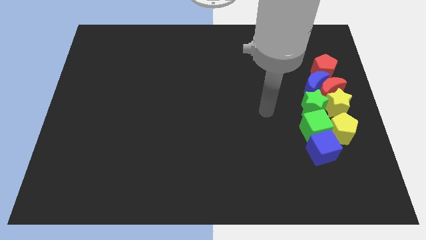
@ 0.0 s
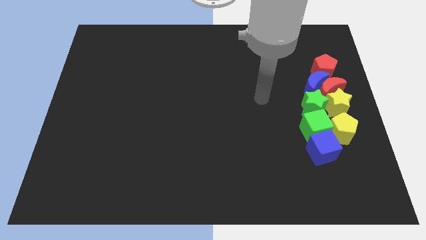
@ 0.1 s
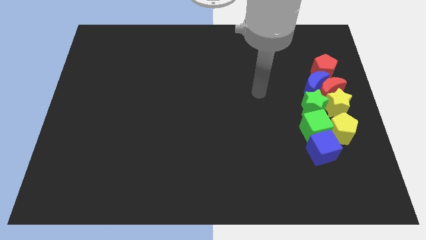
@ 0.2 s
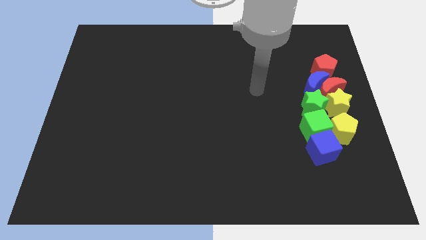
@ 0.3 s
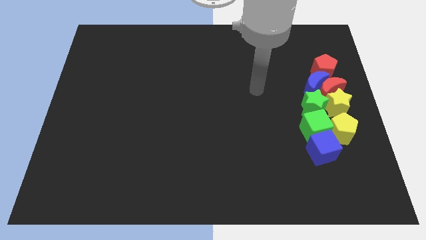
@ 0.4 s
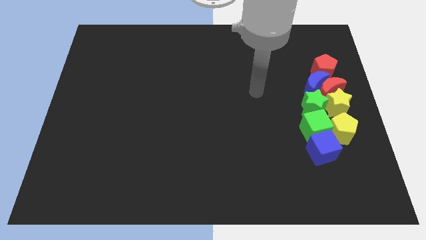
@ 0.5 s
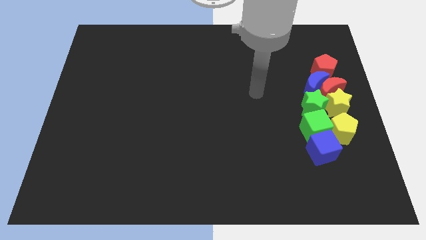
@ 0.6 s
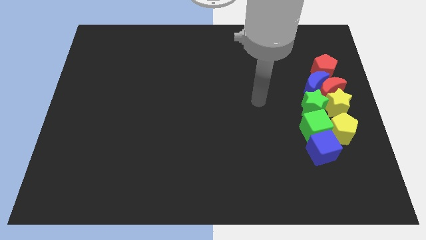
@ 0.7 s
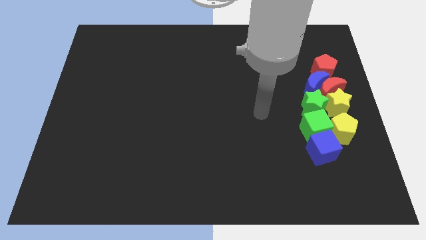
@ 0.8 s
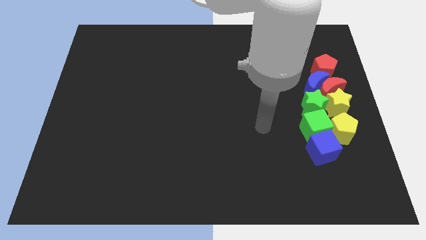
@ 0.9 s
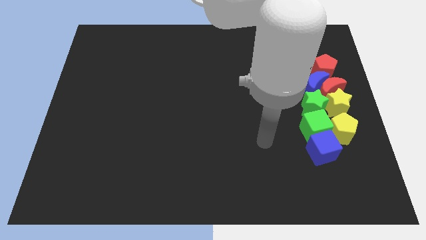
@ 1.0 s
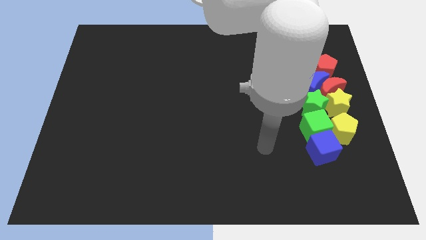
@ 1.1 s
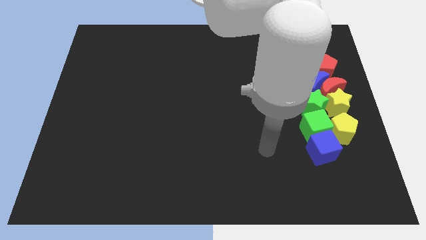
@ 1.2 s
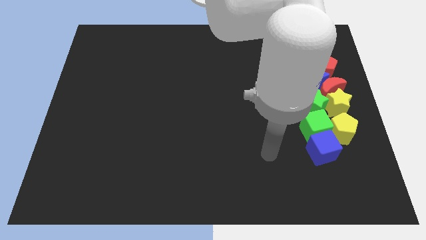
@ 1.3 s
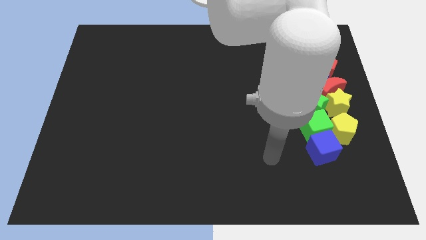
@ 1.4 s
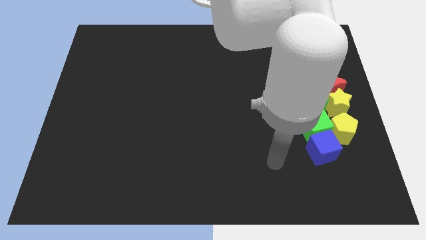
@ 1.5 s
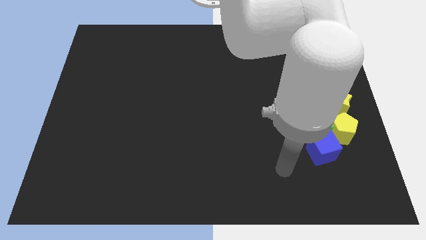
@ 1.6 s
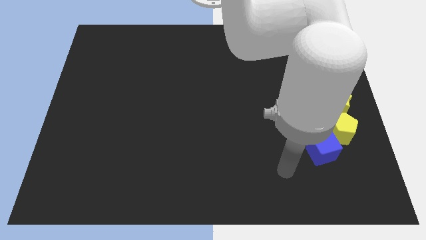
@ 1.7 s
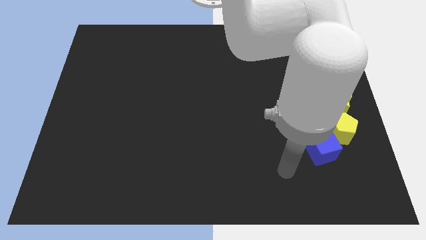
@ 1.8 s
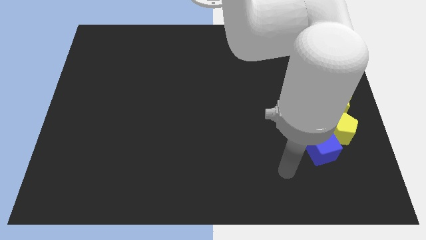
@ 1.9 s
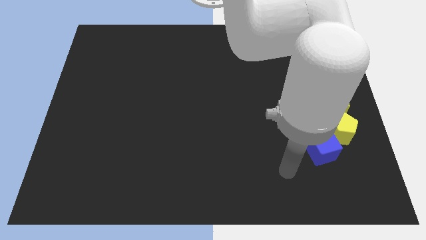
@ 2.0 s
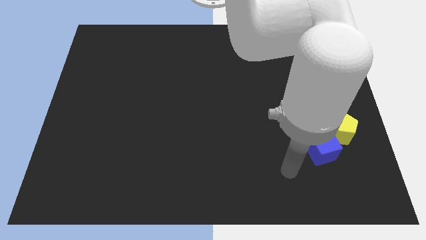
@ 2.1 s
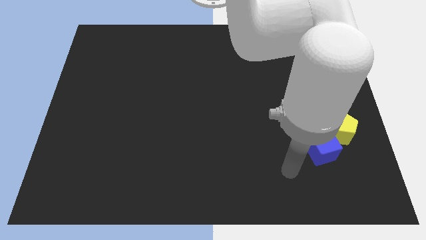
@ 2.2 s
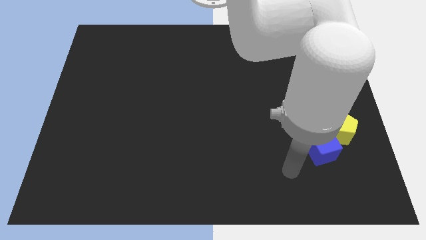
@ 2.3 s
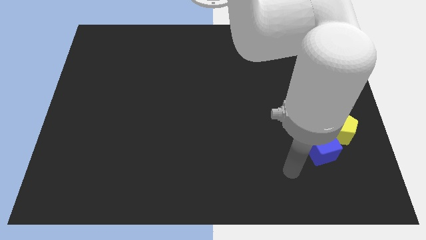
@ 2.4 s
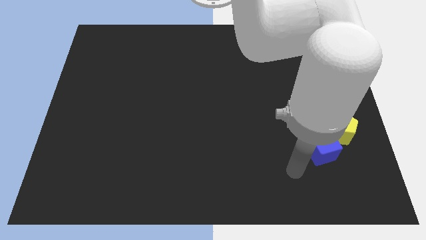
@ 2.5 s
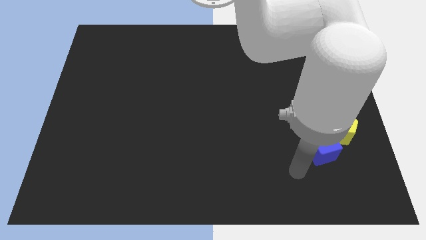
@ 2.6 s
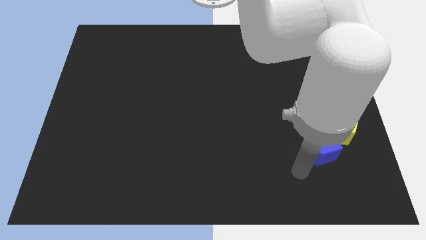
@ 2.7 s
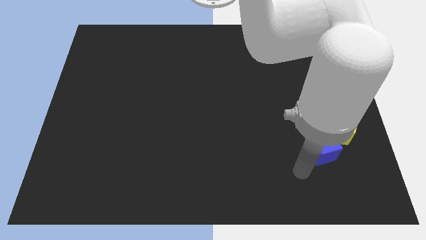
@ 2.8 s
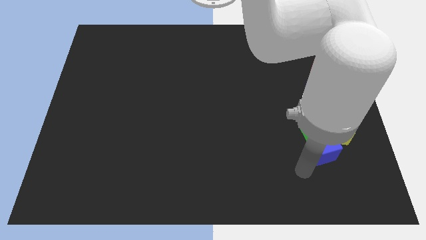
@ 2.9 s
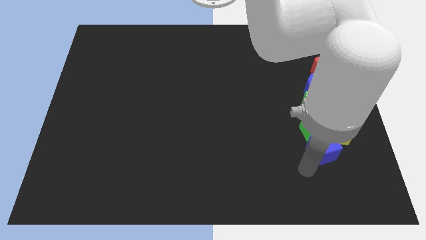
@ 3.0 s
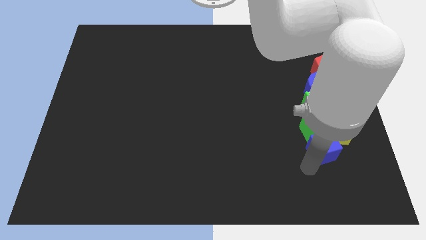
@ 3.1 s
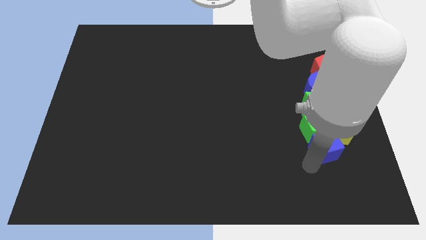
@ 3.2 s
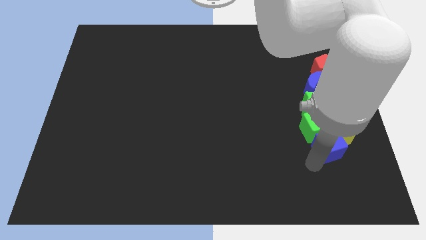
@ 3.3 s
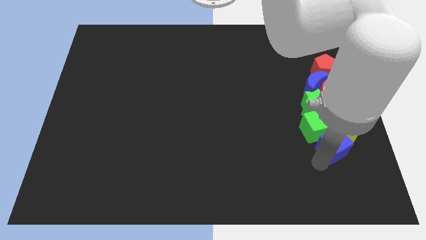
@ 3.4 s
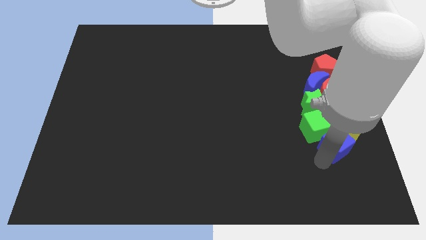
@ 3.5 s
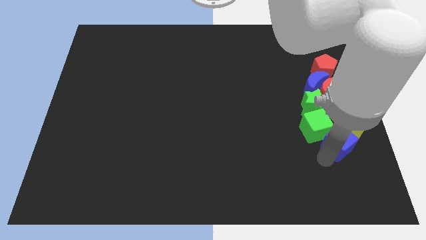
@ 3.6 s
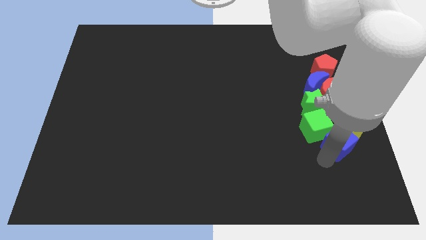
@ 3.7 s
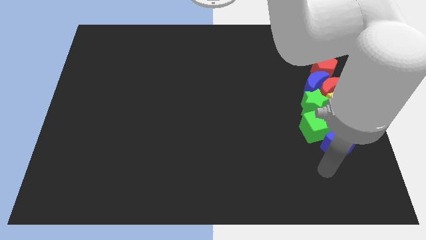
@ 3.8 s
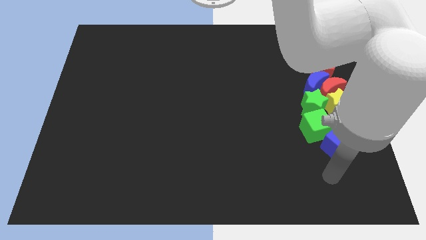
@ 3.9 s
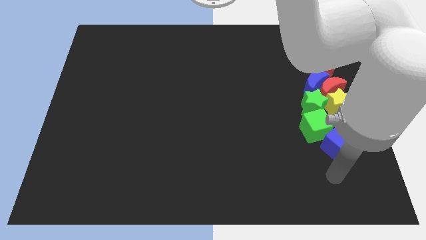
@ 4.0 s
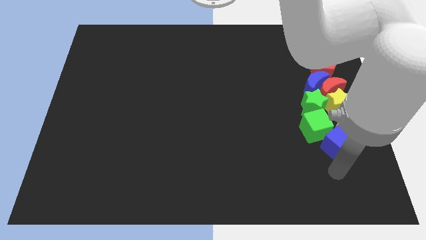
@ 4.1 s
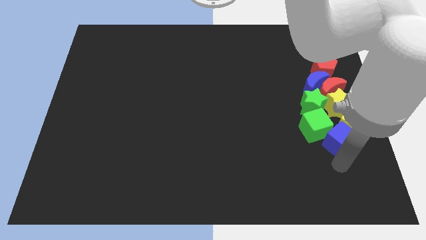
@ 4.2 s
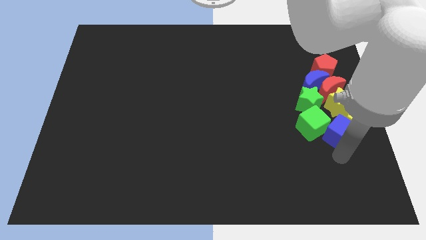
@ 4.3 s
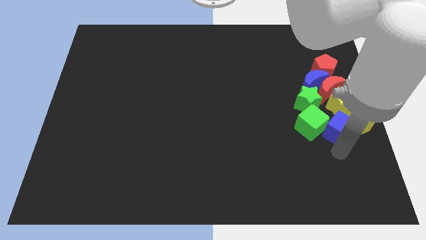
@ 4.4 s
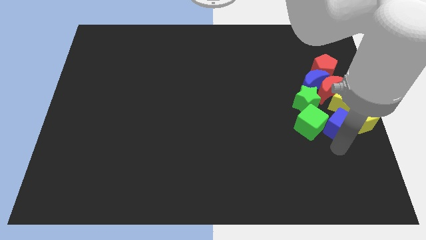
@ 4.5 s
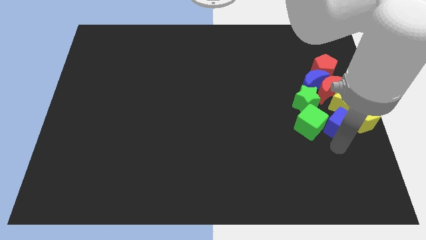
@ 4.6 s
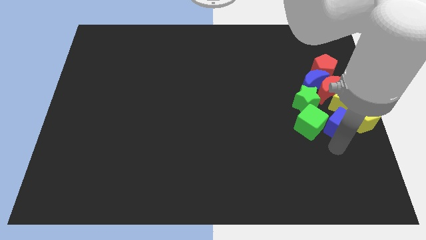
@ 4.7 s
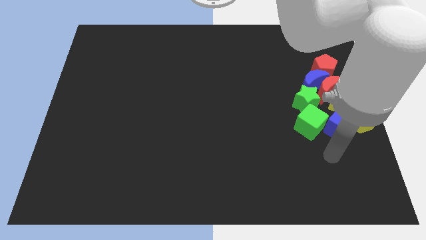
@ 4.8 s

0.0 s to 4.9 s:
separate the green cube and yellow pentagon with the blue cube

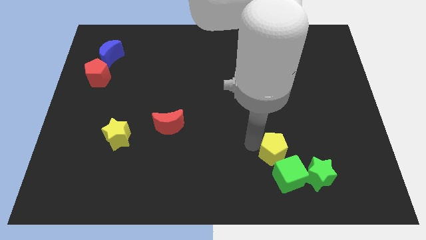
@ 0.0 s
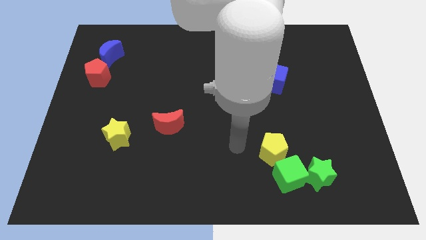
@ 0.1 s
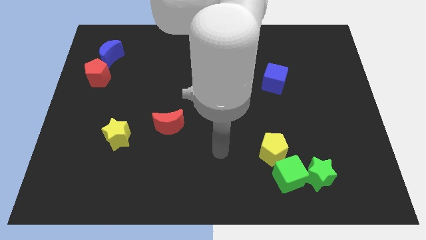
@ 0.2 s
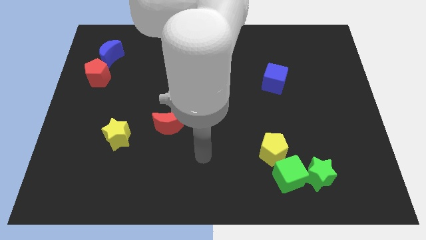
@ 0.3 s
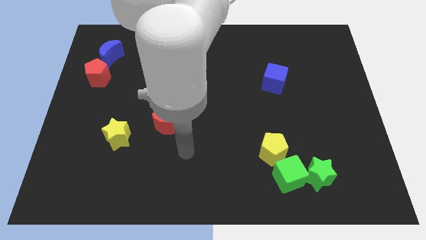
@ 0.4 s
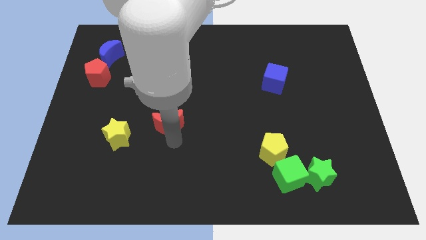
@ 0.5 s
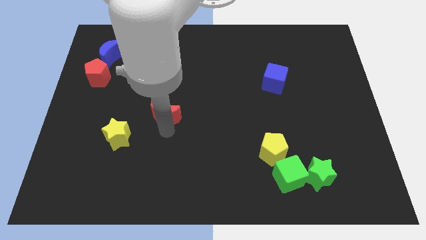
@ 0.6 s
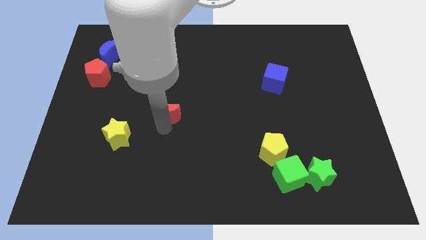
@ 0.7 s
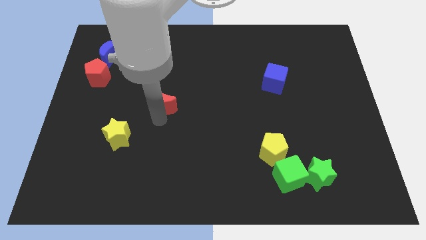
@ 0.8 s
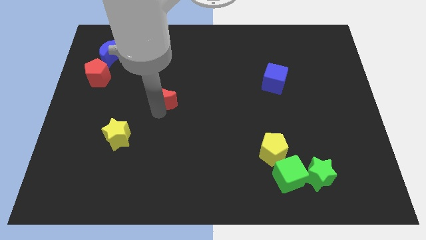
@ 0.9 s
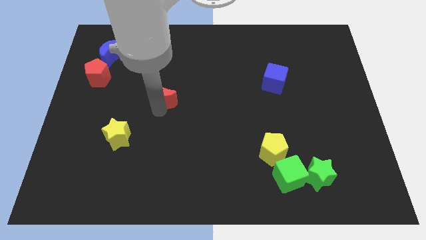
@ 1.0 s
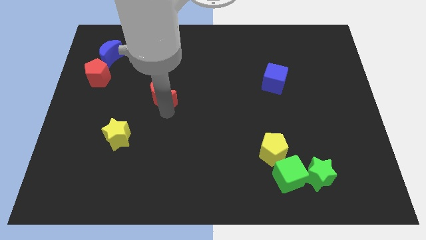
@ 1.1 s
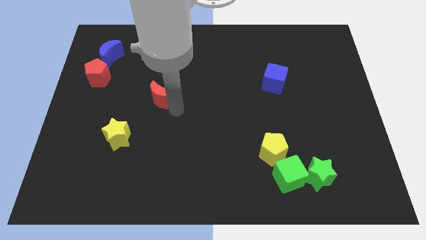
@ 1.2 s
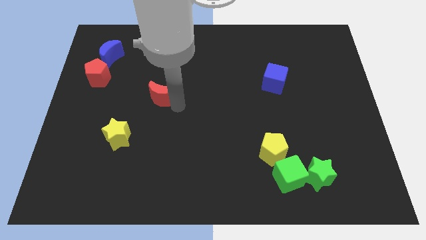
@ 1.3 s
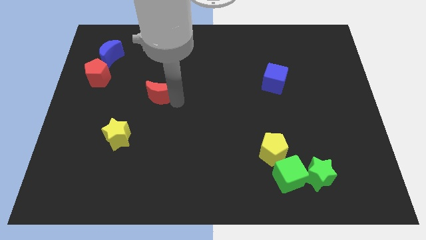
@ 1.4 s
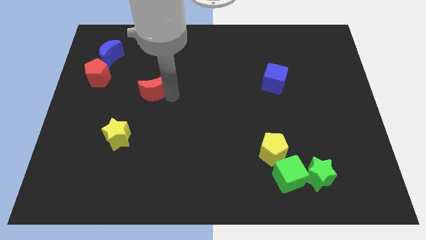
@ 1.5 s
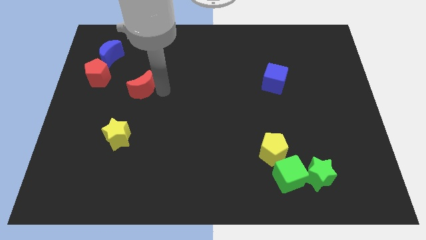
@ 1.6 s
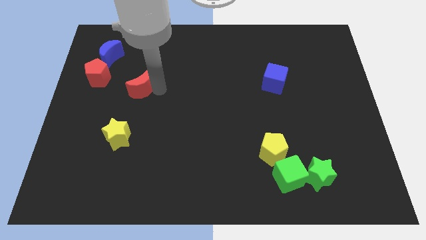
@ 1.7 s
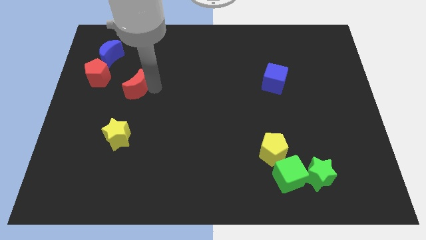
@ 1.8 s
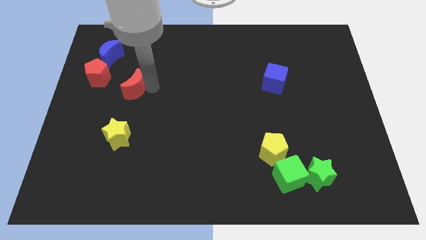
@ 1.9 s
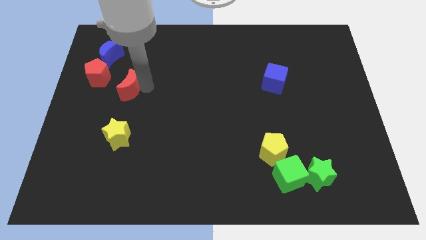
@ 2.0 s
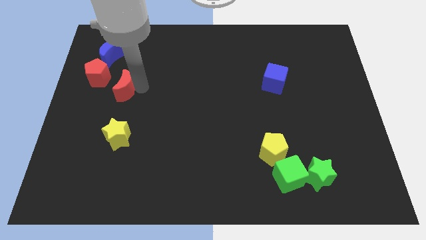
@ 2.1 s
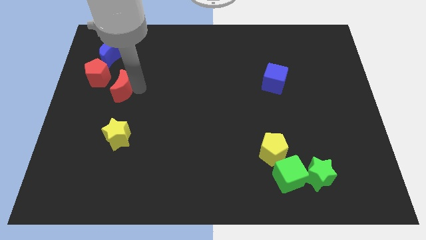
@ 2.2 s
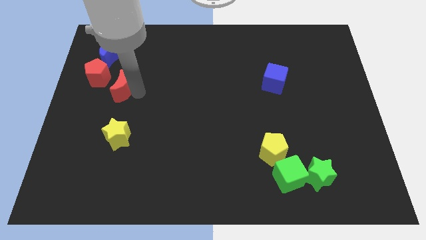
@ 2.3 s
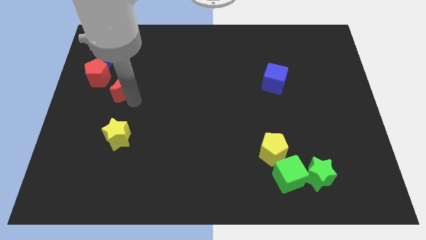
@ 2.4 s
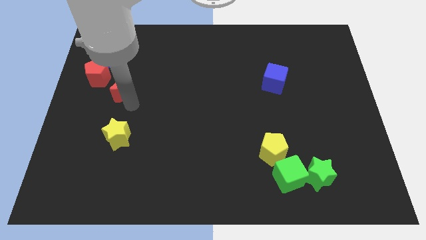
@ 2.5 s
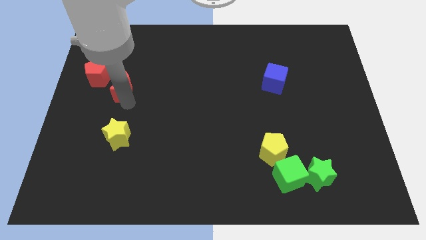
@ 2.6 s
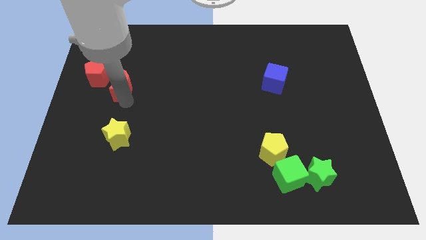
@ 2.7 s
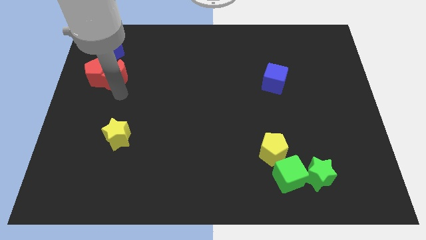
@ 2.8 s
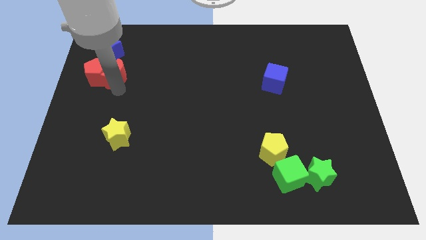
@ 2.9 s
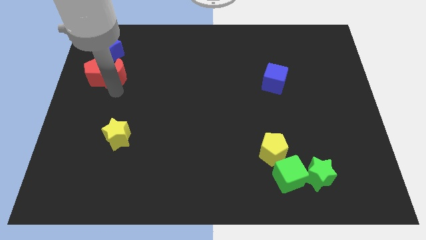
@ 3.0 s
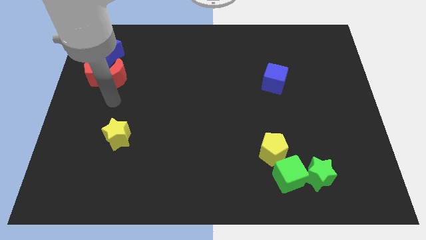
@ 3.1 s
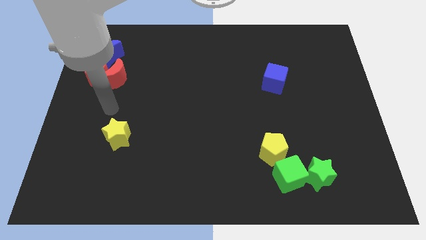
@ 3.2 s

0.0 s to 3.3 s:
push the red moon parallel left to the blue cube

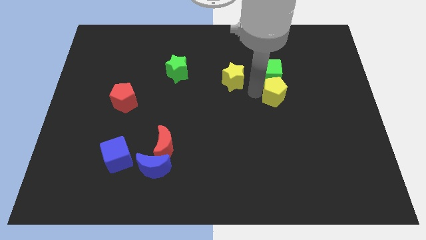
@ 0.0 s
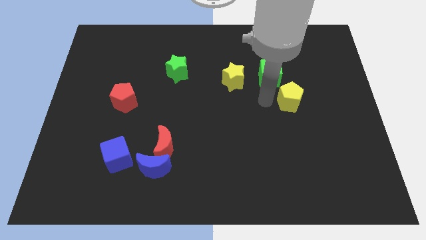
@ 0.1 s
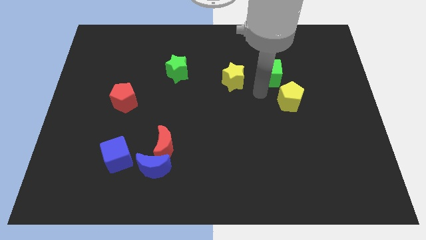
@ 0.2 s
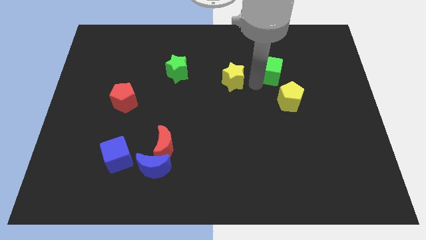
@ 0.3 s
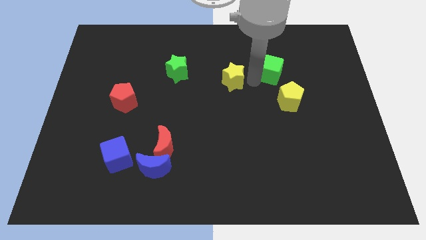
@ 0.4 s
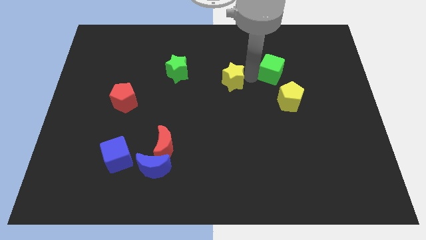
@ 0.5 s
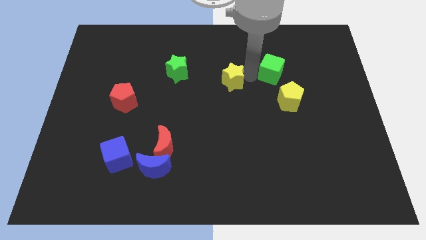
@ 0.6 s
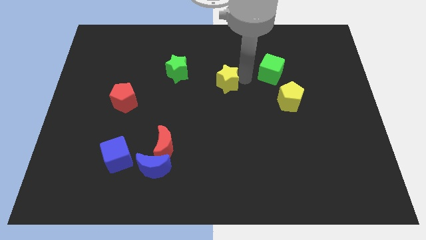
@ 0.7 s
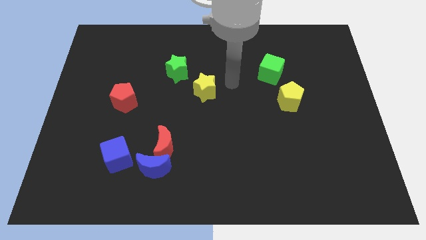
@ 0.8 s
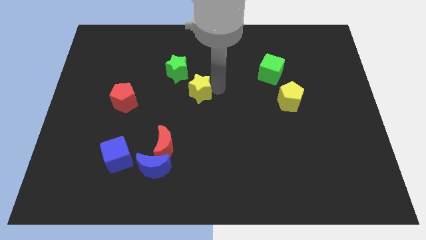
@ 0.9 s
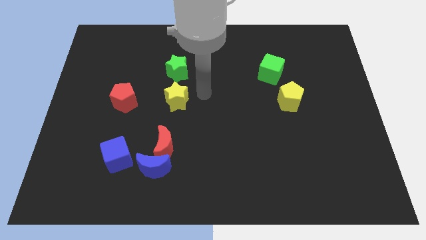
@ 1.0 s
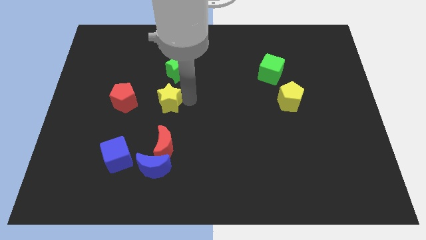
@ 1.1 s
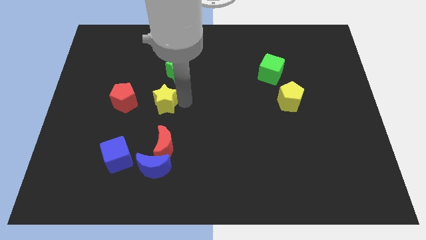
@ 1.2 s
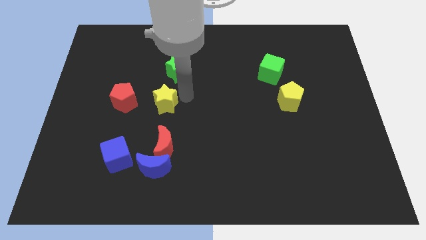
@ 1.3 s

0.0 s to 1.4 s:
push the yellow star to the right side of the red pentagon
